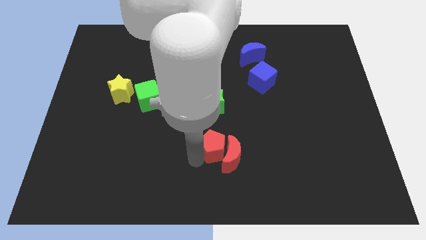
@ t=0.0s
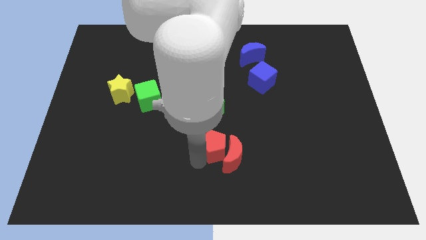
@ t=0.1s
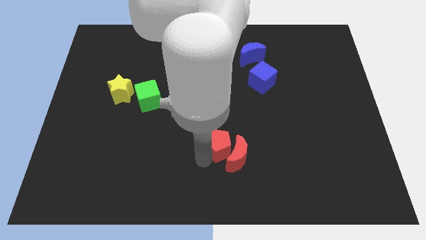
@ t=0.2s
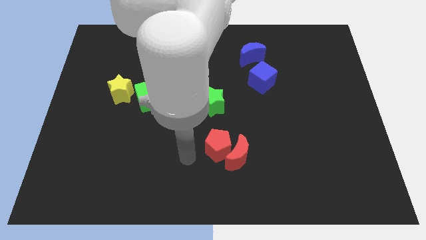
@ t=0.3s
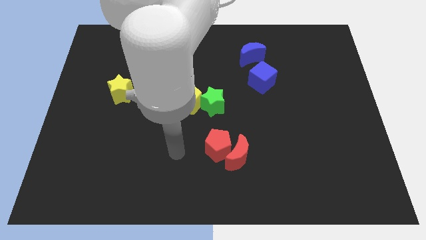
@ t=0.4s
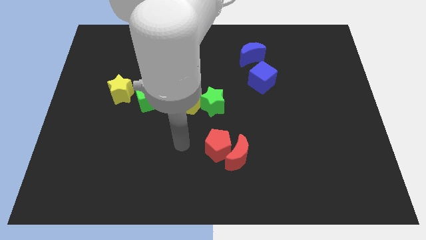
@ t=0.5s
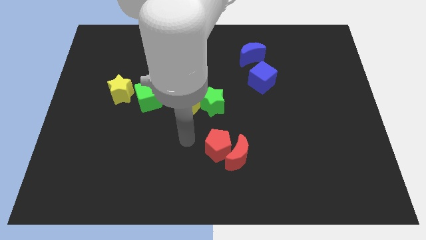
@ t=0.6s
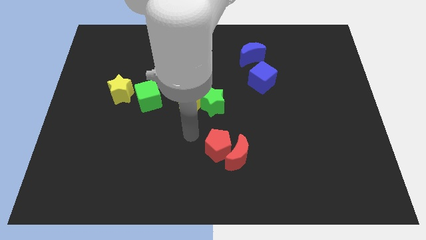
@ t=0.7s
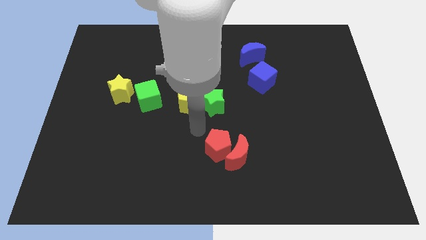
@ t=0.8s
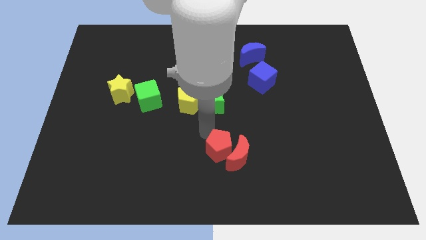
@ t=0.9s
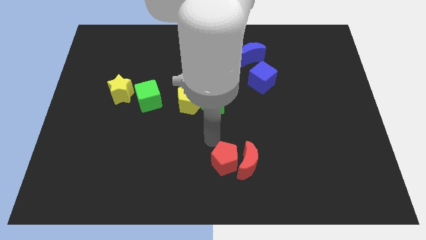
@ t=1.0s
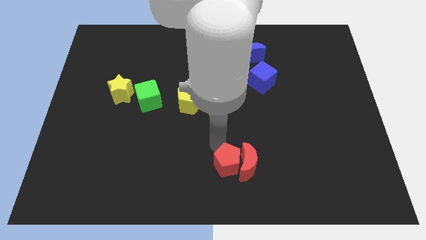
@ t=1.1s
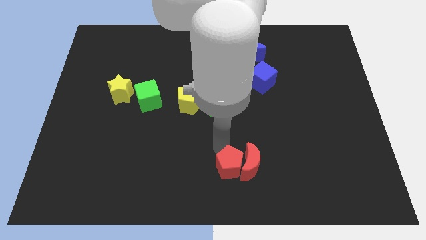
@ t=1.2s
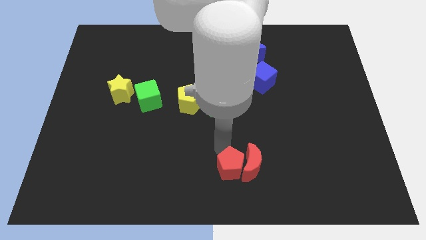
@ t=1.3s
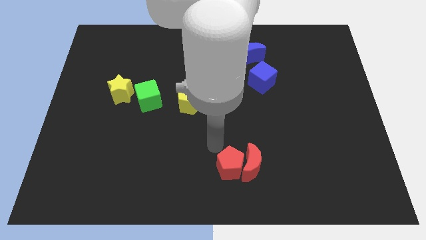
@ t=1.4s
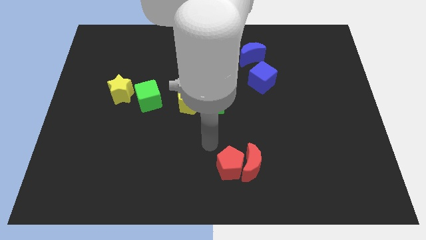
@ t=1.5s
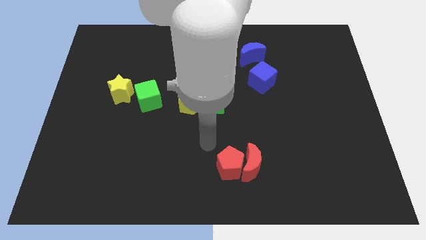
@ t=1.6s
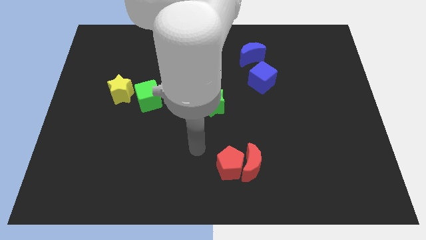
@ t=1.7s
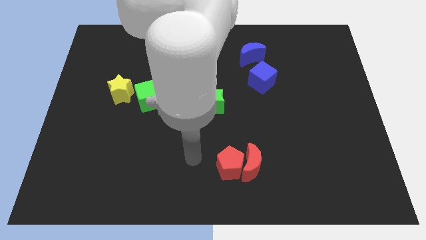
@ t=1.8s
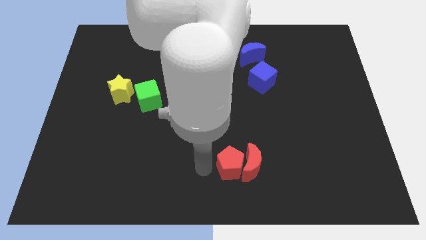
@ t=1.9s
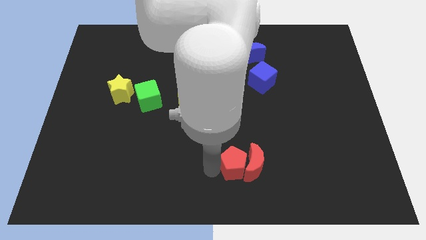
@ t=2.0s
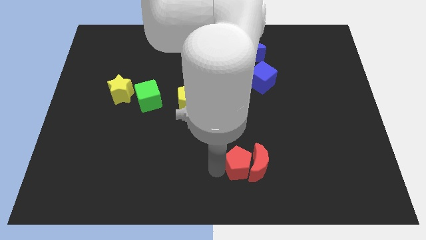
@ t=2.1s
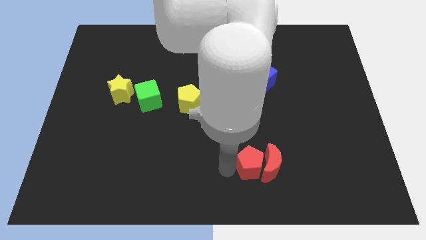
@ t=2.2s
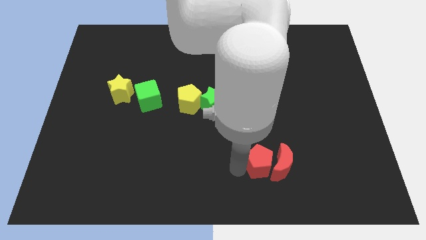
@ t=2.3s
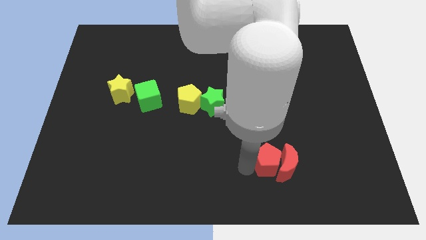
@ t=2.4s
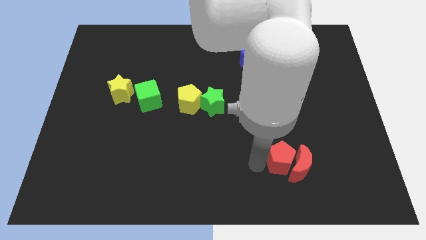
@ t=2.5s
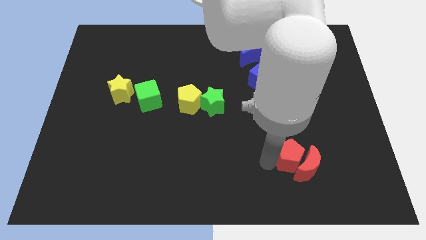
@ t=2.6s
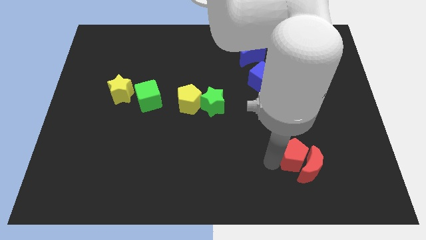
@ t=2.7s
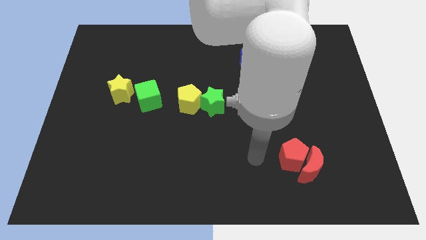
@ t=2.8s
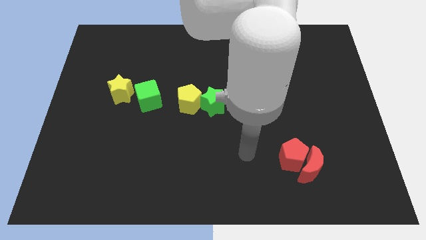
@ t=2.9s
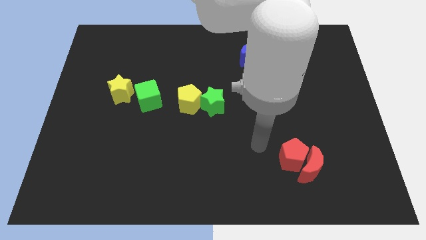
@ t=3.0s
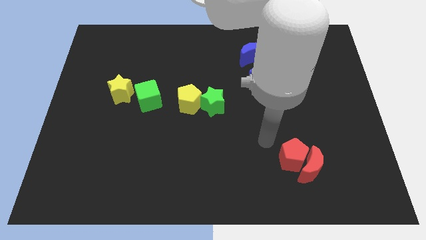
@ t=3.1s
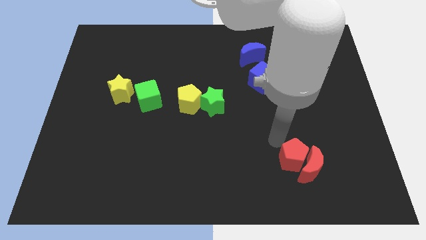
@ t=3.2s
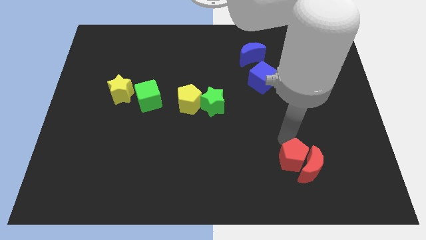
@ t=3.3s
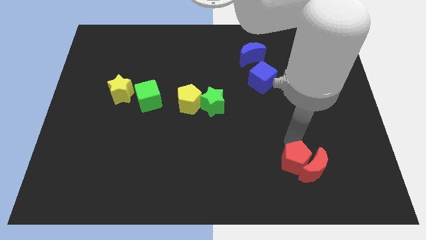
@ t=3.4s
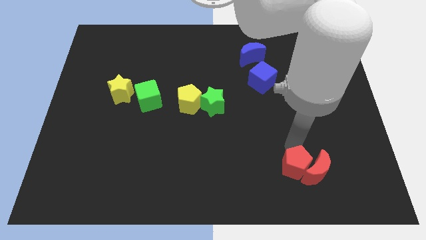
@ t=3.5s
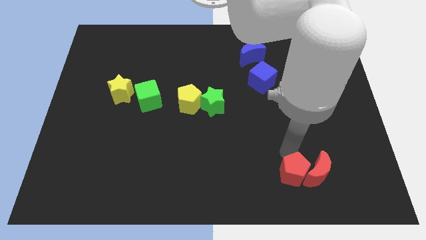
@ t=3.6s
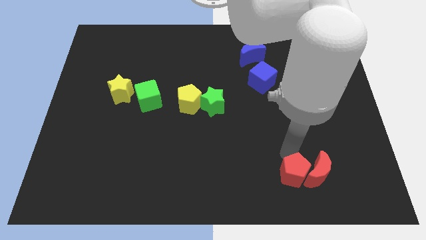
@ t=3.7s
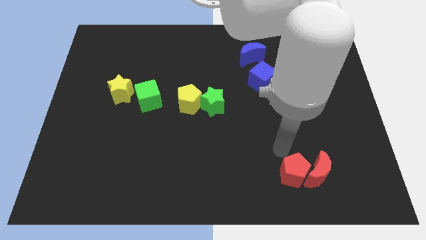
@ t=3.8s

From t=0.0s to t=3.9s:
push the red blocks towards the bottom right corner of the board

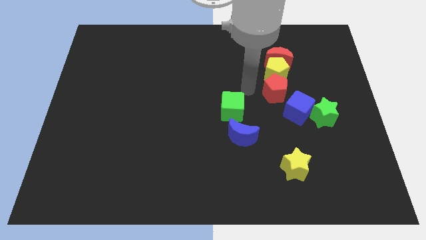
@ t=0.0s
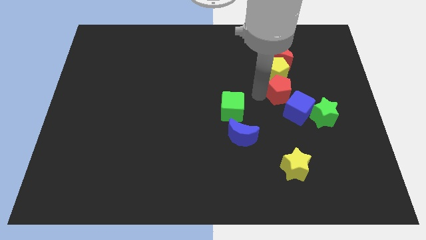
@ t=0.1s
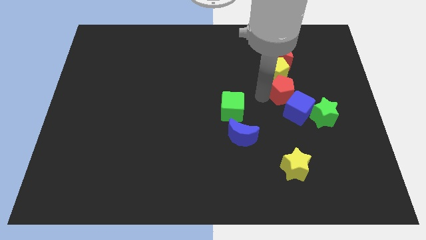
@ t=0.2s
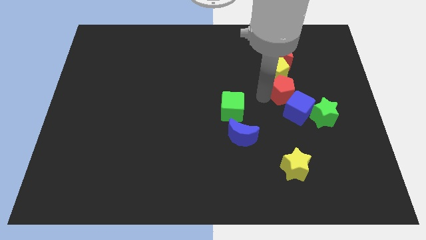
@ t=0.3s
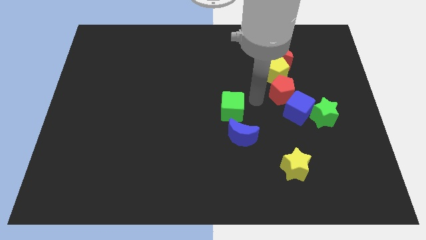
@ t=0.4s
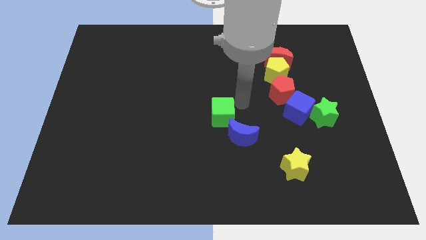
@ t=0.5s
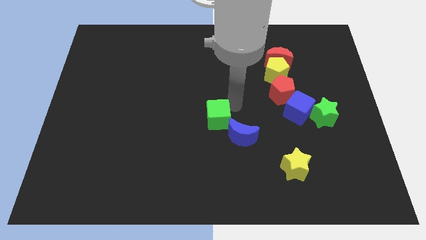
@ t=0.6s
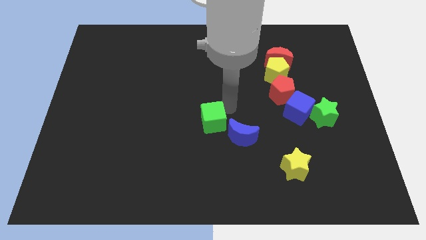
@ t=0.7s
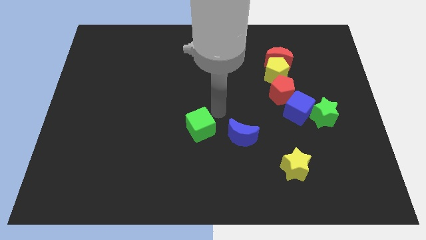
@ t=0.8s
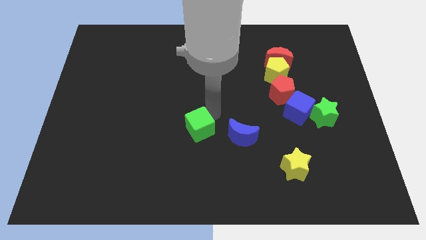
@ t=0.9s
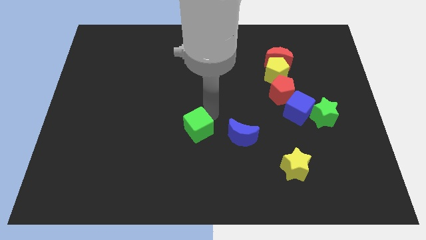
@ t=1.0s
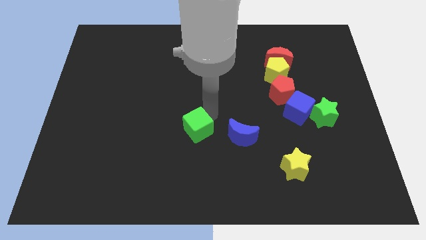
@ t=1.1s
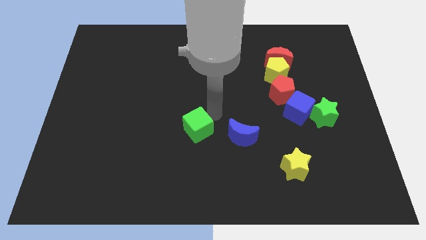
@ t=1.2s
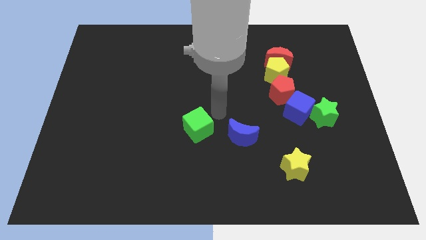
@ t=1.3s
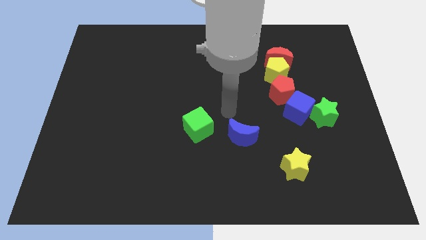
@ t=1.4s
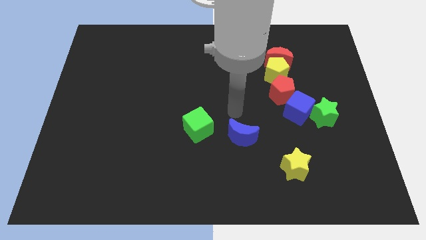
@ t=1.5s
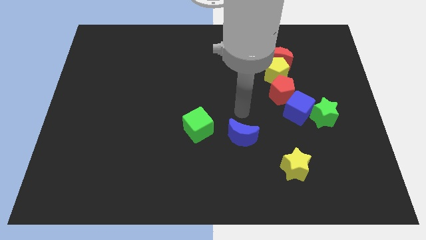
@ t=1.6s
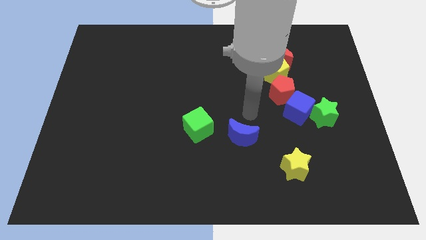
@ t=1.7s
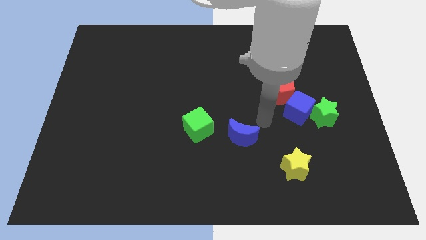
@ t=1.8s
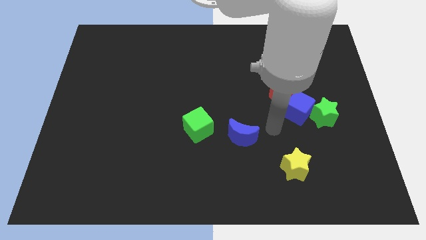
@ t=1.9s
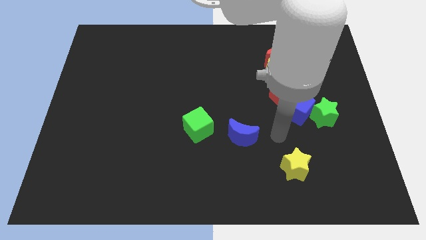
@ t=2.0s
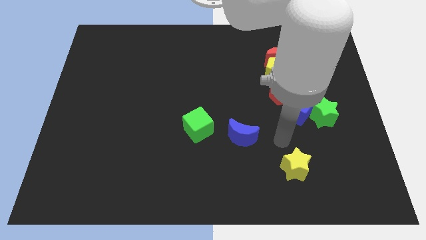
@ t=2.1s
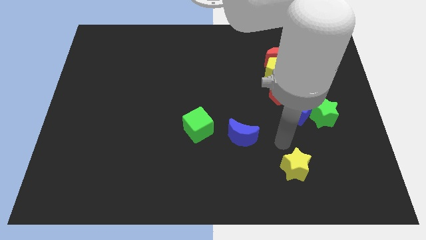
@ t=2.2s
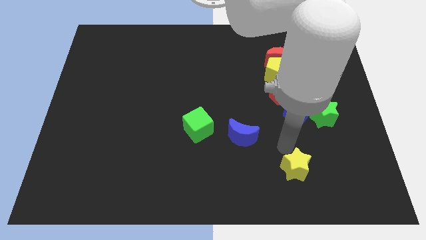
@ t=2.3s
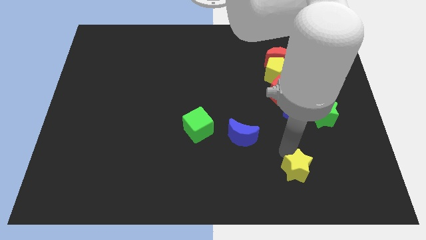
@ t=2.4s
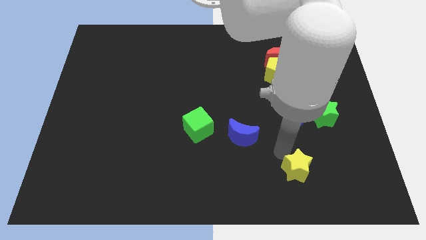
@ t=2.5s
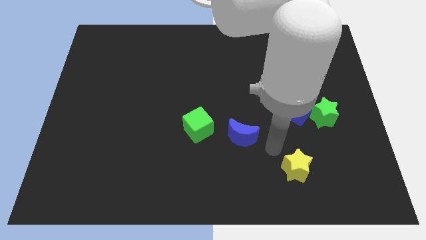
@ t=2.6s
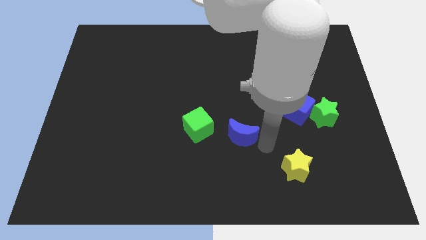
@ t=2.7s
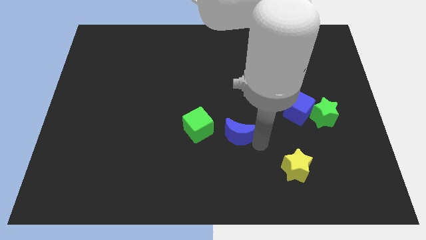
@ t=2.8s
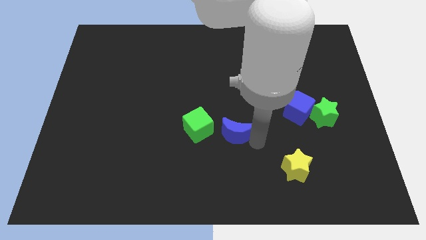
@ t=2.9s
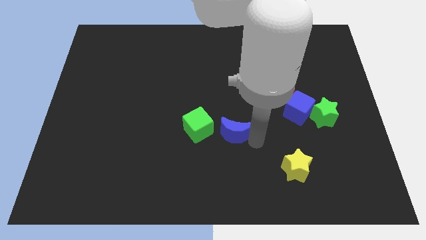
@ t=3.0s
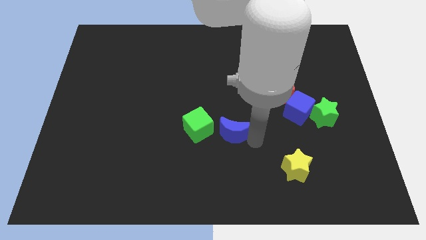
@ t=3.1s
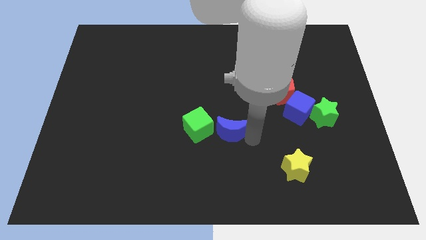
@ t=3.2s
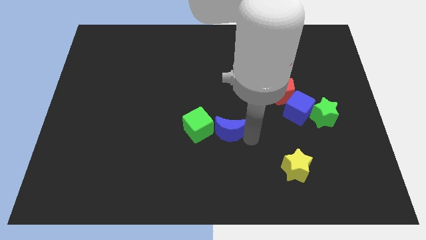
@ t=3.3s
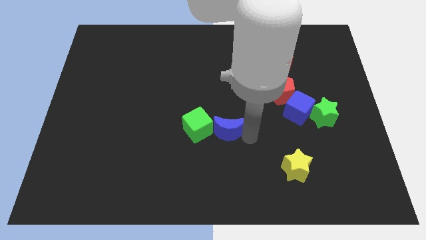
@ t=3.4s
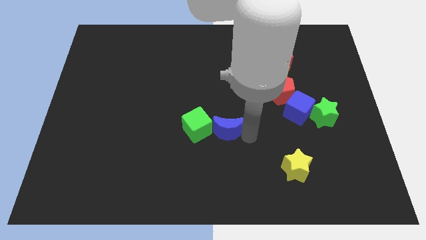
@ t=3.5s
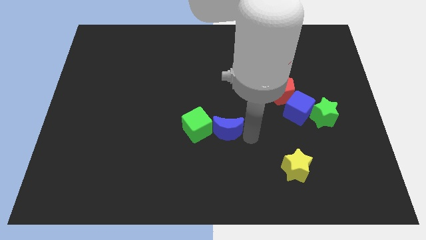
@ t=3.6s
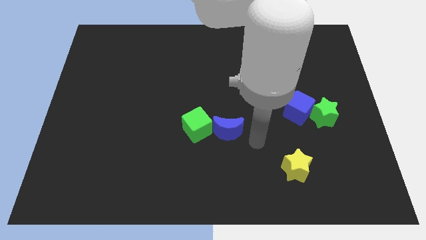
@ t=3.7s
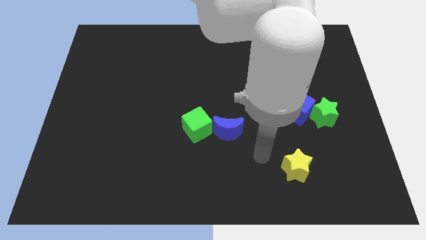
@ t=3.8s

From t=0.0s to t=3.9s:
move the blue crescent right to the green cube

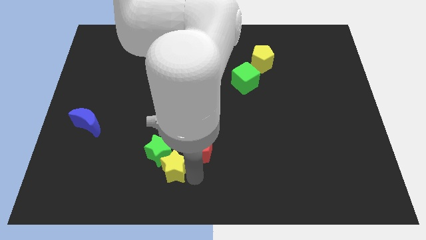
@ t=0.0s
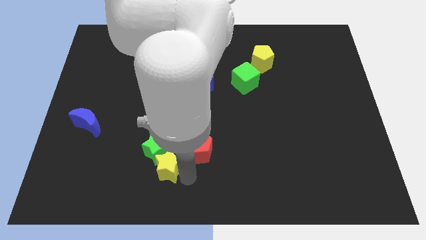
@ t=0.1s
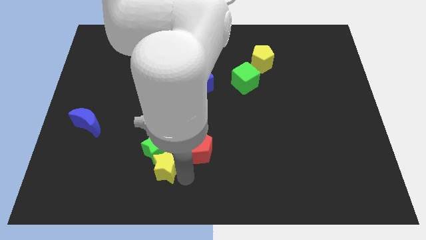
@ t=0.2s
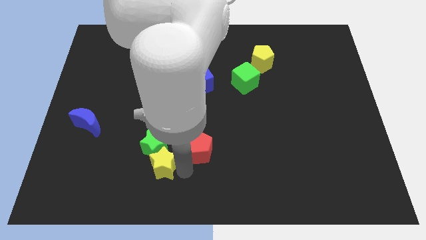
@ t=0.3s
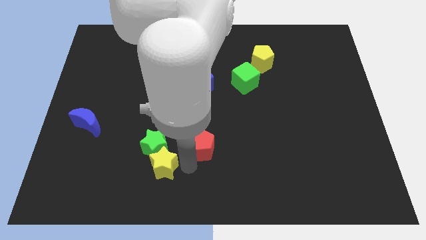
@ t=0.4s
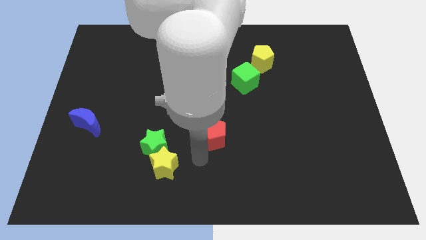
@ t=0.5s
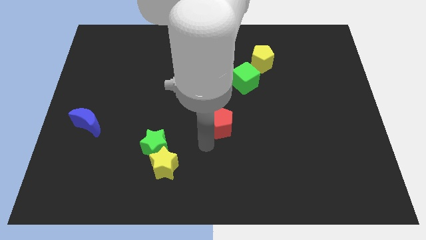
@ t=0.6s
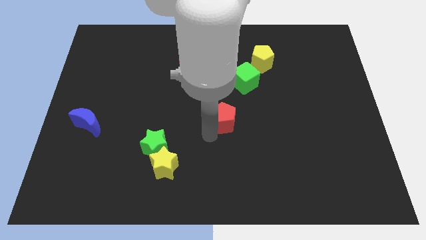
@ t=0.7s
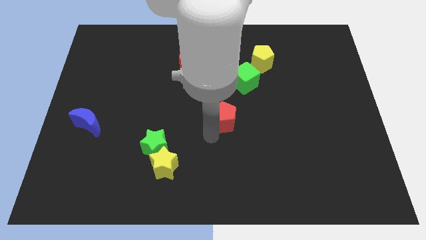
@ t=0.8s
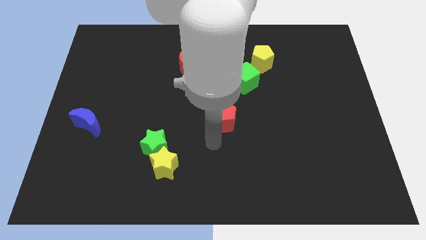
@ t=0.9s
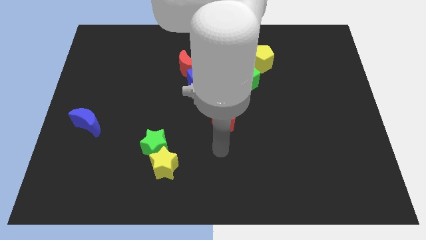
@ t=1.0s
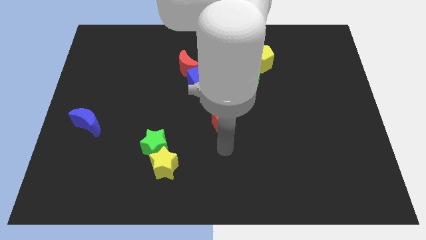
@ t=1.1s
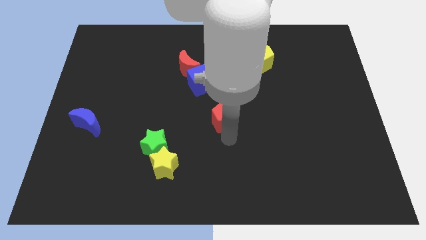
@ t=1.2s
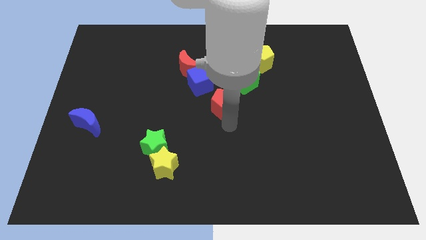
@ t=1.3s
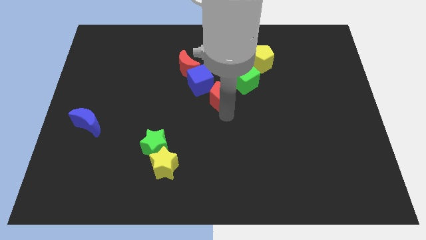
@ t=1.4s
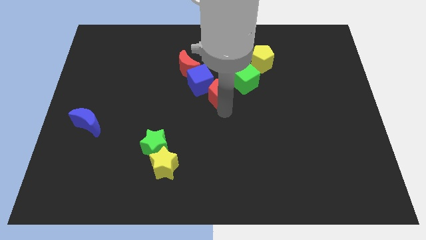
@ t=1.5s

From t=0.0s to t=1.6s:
move red pentagon left below the green cube
